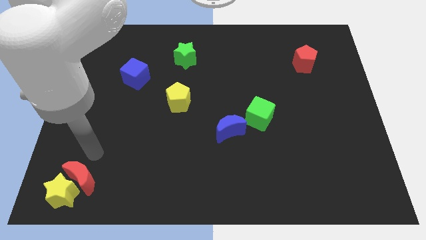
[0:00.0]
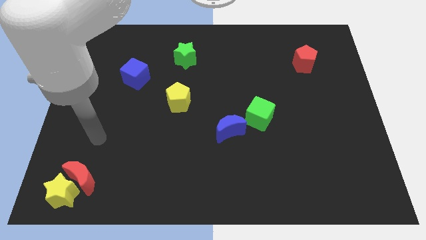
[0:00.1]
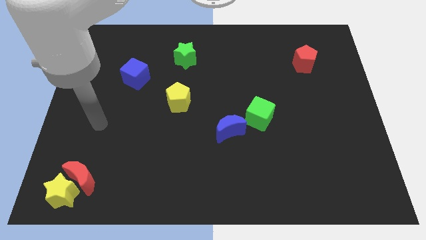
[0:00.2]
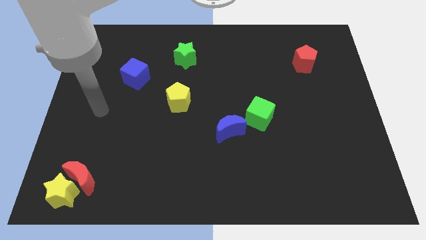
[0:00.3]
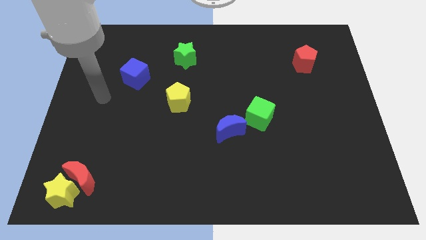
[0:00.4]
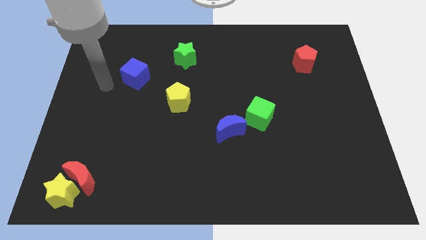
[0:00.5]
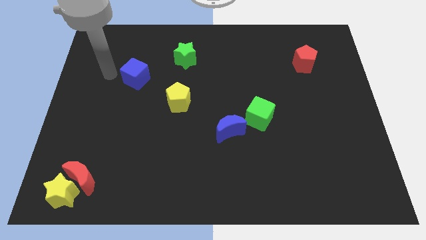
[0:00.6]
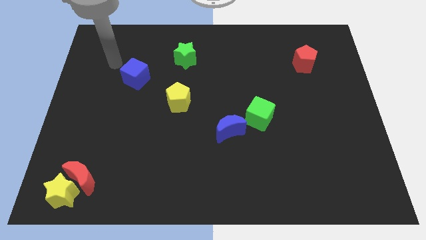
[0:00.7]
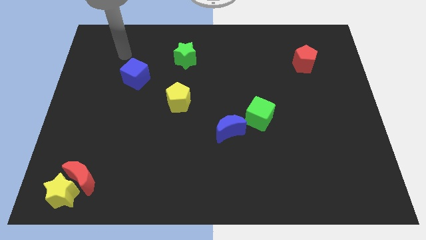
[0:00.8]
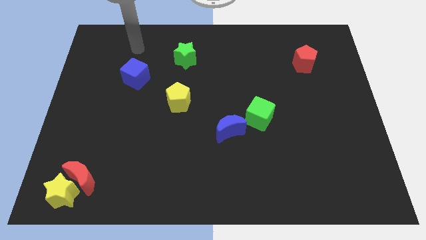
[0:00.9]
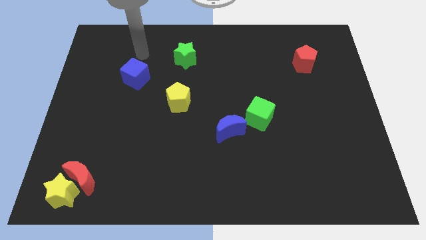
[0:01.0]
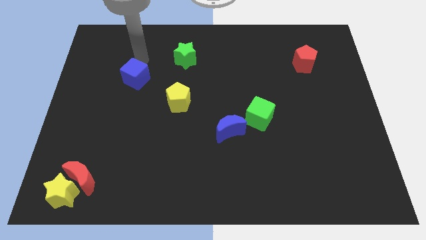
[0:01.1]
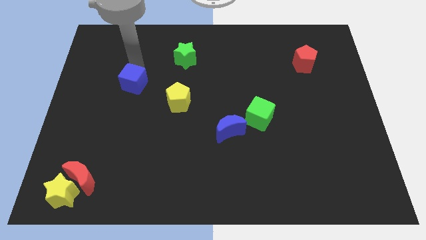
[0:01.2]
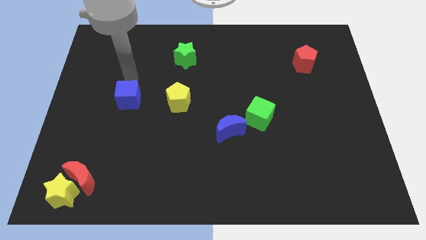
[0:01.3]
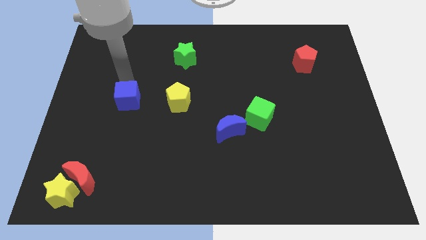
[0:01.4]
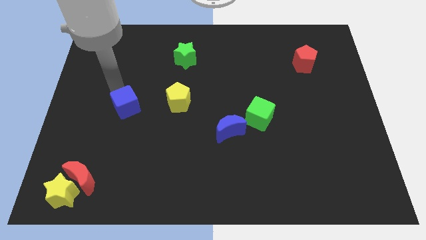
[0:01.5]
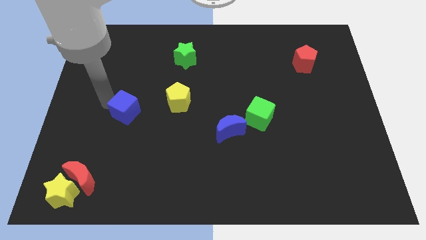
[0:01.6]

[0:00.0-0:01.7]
place the blue cube parallel to yellow pentagon

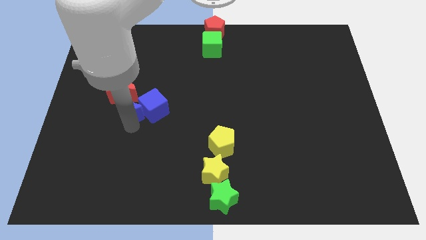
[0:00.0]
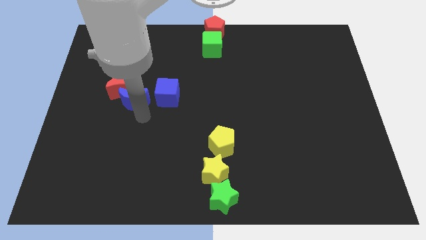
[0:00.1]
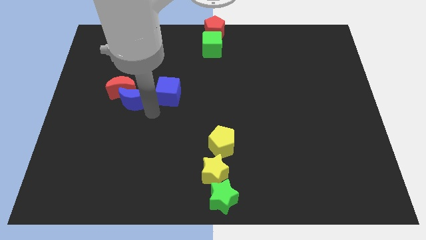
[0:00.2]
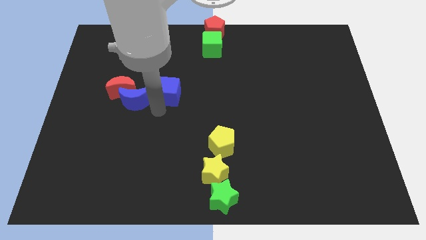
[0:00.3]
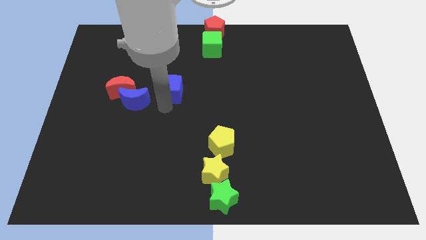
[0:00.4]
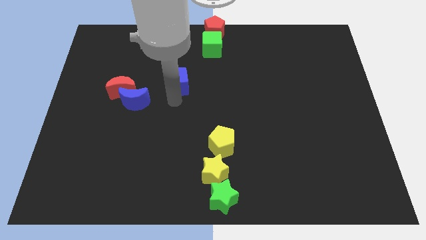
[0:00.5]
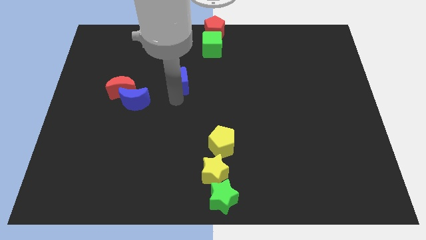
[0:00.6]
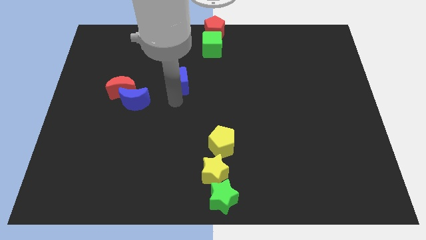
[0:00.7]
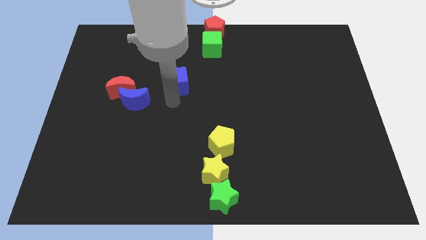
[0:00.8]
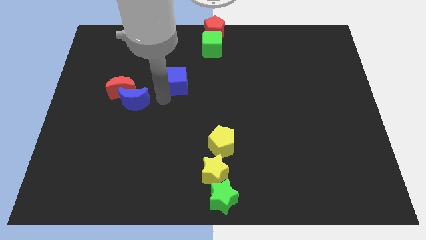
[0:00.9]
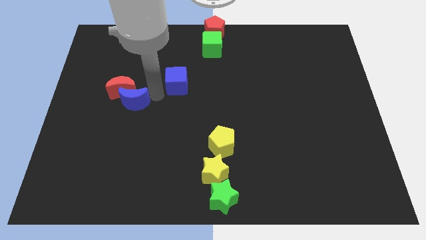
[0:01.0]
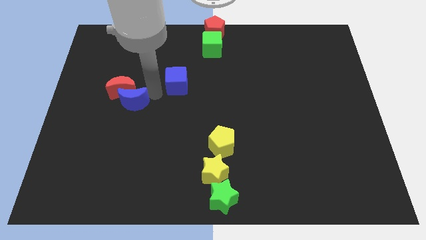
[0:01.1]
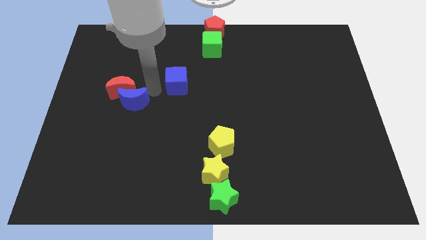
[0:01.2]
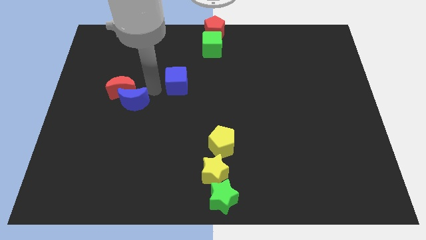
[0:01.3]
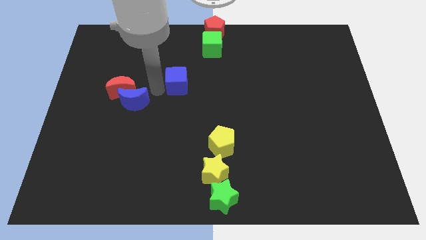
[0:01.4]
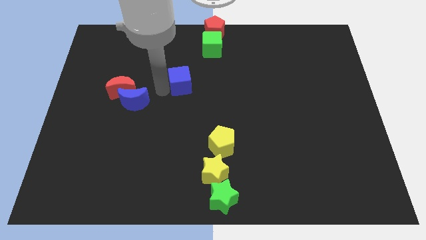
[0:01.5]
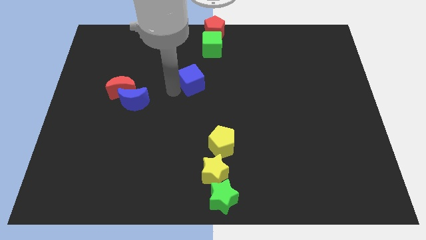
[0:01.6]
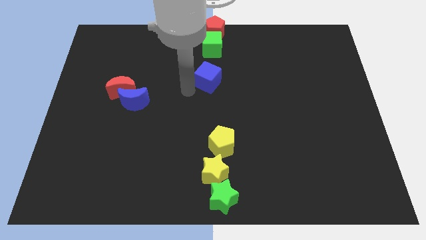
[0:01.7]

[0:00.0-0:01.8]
separate blue cube from the blue moon

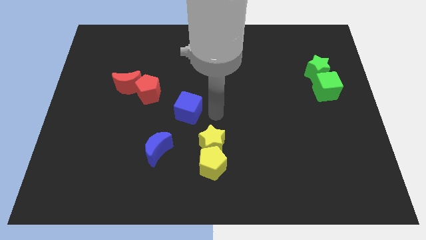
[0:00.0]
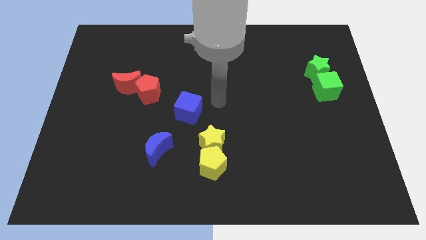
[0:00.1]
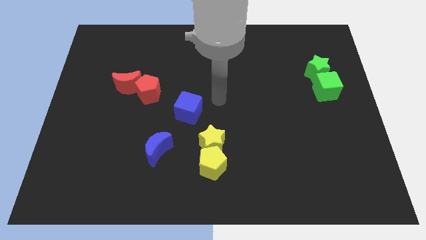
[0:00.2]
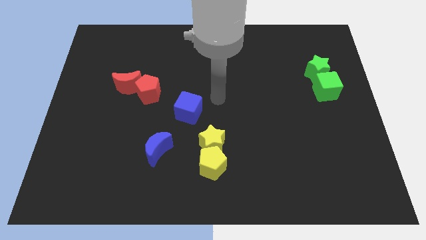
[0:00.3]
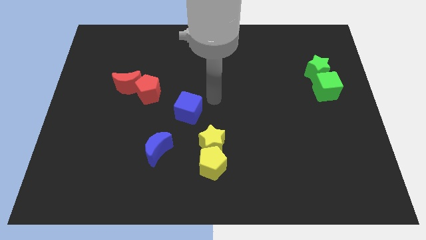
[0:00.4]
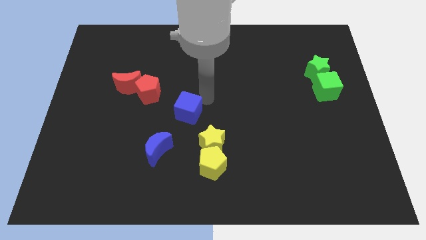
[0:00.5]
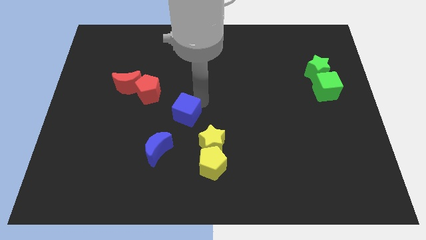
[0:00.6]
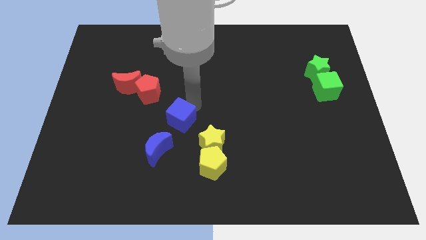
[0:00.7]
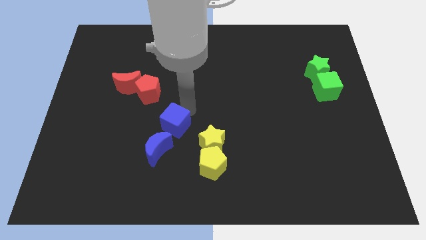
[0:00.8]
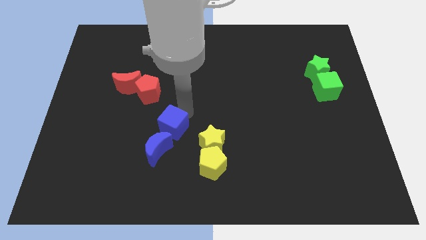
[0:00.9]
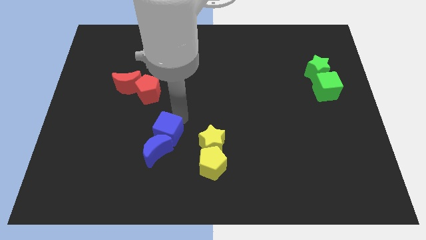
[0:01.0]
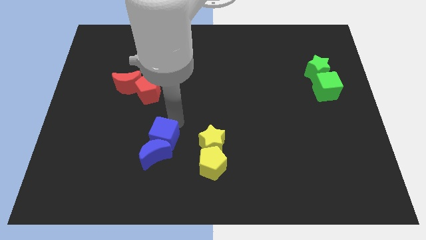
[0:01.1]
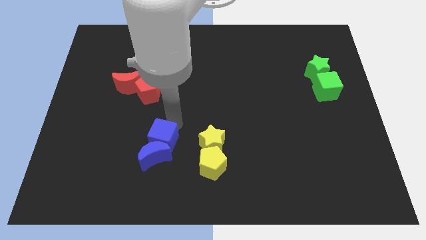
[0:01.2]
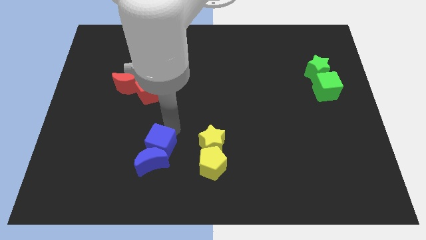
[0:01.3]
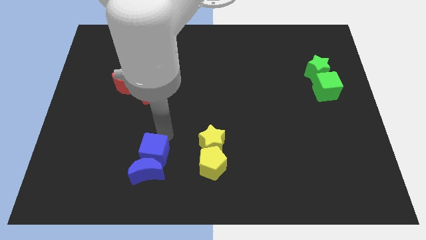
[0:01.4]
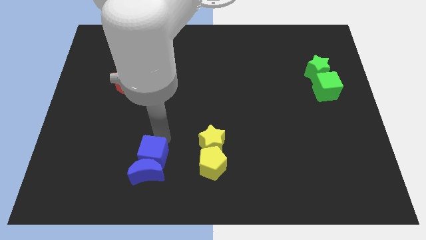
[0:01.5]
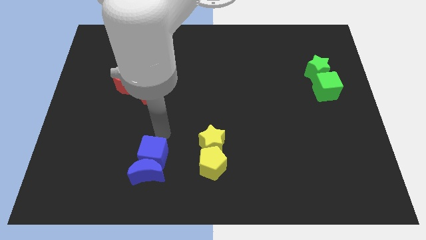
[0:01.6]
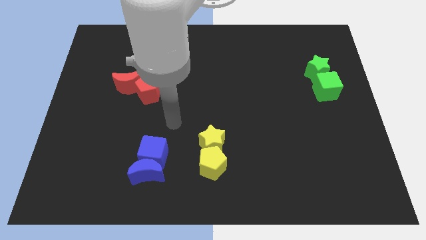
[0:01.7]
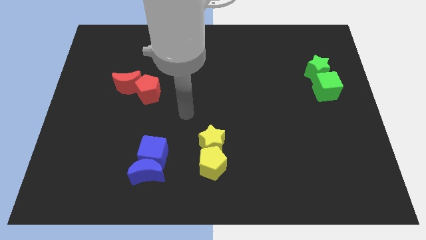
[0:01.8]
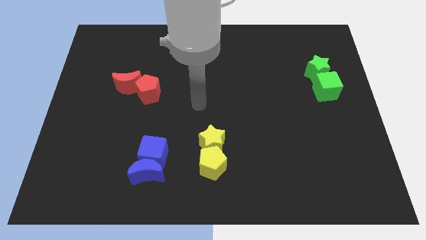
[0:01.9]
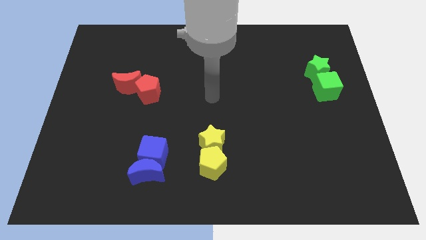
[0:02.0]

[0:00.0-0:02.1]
move blue cube on top of blue moon

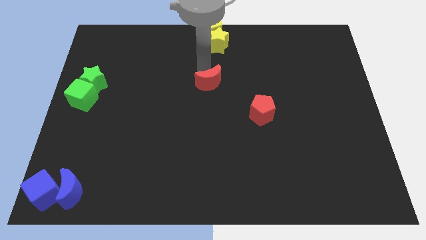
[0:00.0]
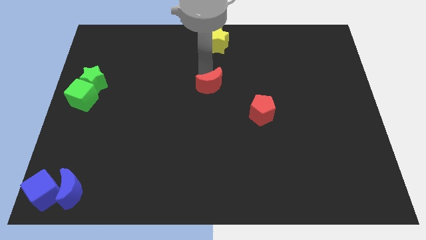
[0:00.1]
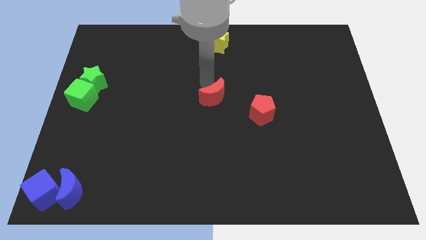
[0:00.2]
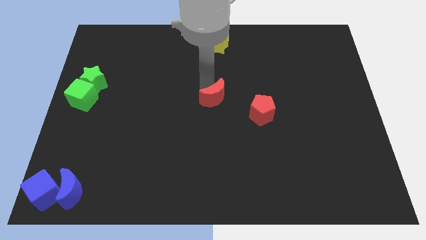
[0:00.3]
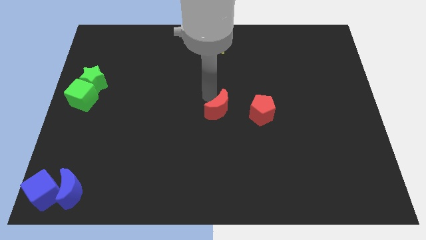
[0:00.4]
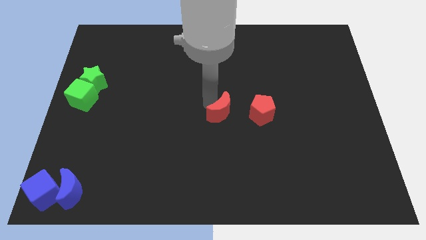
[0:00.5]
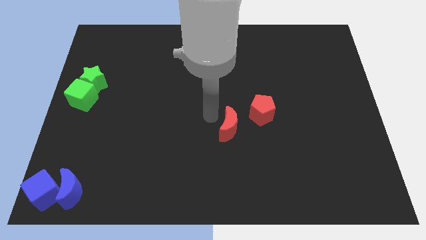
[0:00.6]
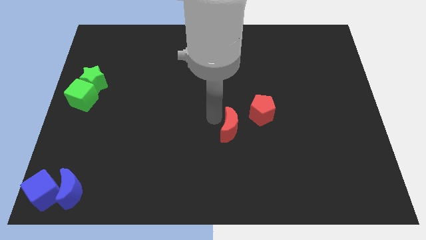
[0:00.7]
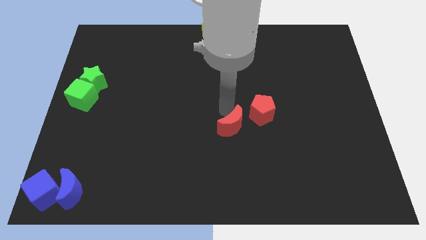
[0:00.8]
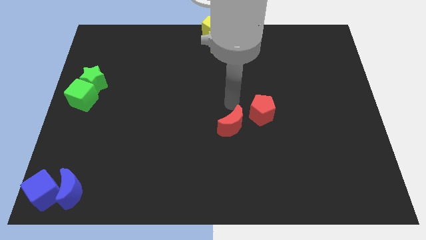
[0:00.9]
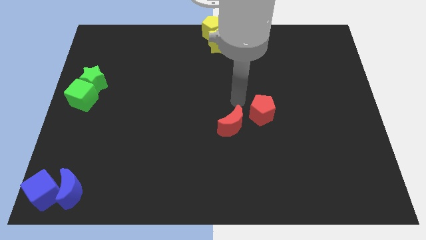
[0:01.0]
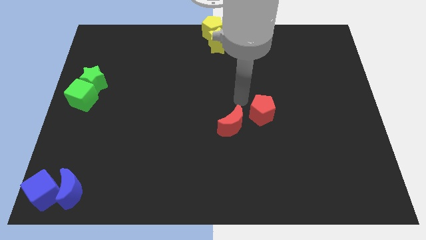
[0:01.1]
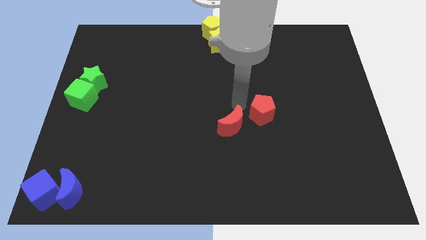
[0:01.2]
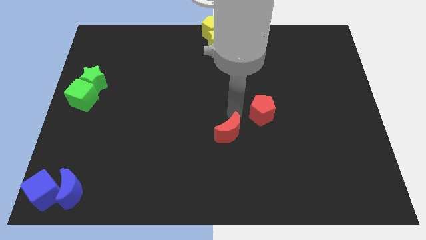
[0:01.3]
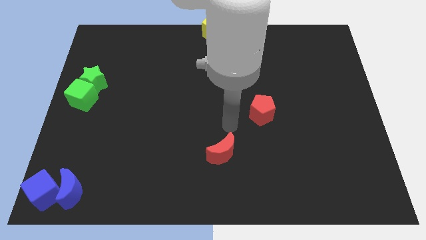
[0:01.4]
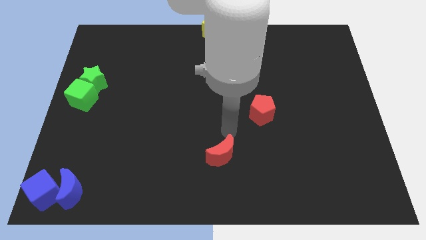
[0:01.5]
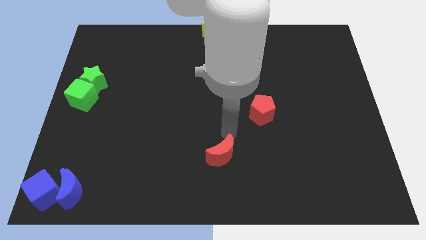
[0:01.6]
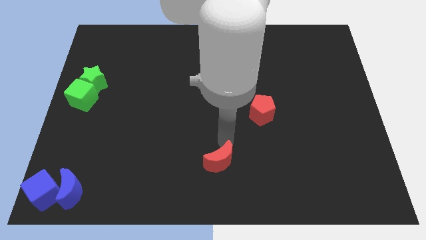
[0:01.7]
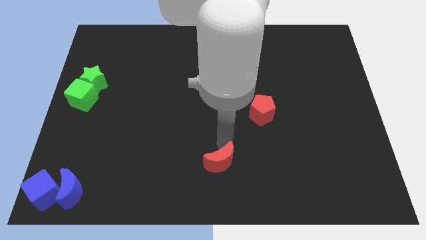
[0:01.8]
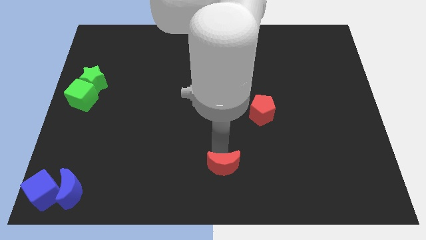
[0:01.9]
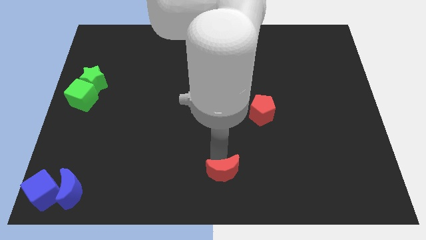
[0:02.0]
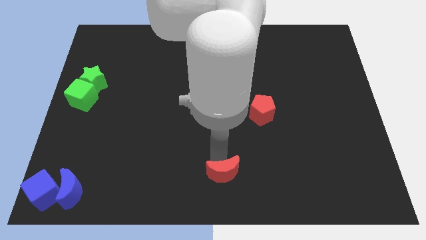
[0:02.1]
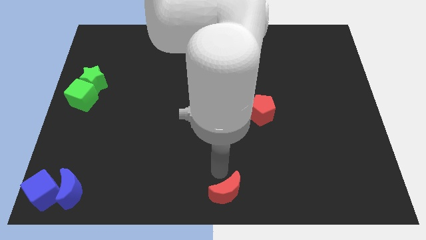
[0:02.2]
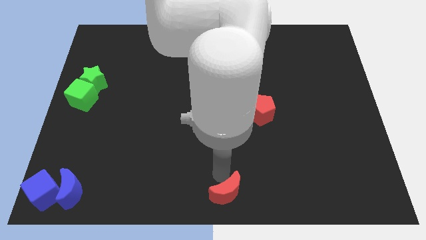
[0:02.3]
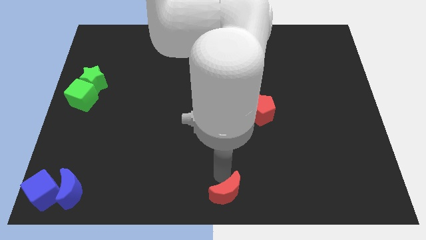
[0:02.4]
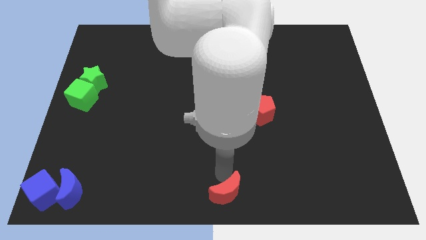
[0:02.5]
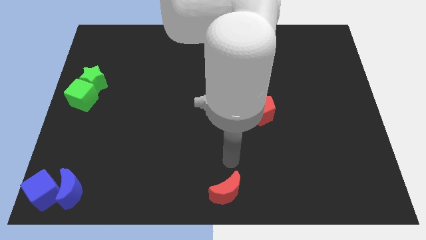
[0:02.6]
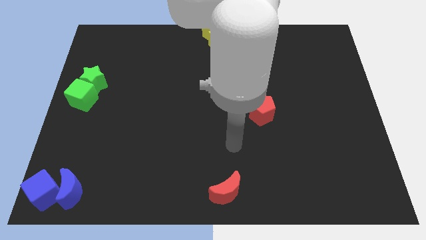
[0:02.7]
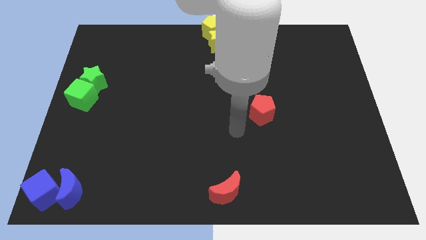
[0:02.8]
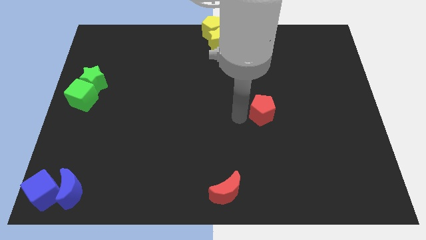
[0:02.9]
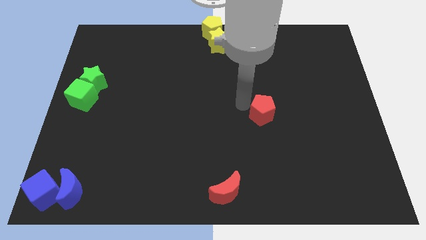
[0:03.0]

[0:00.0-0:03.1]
move the red moon to the bottom center of the board

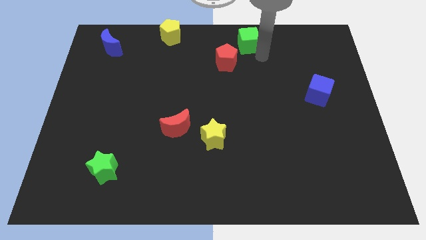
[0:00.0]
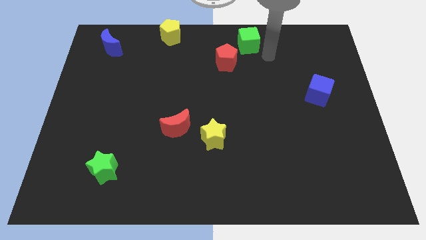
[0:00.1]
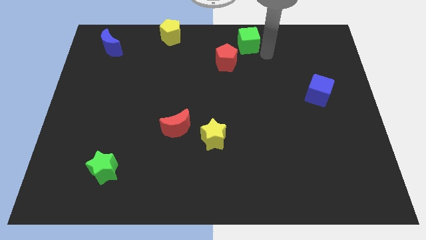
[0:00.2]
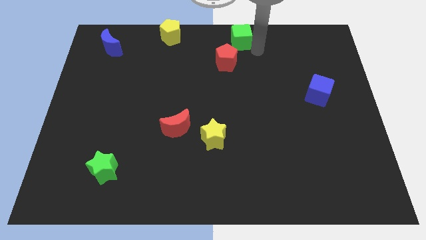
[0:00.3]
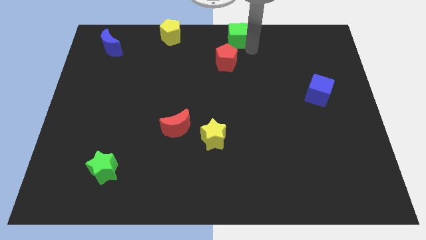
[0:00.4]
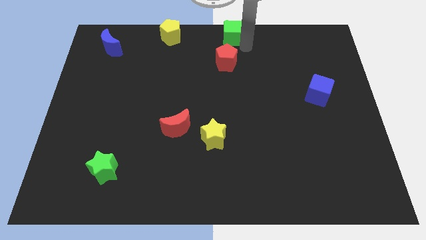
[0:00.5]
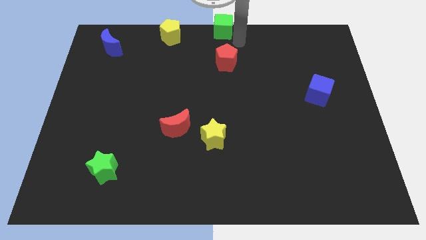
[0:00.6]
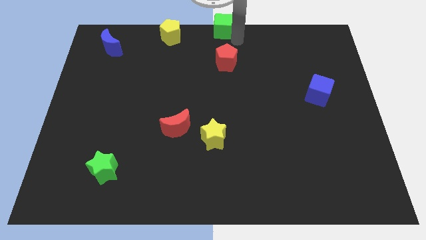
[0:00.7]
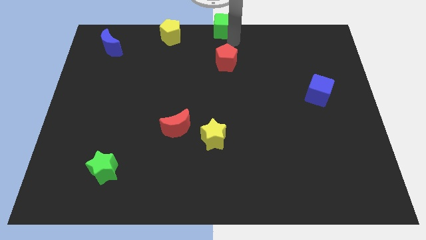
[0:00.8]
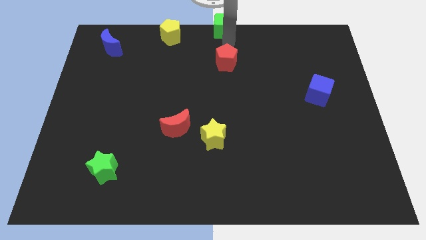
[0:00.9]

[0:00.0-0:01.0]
move the green cube to the top center of the board
